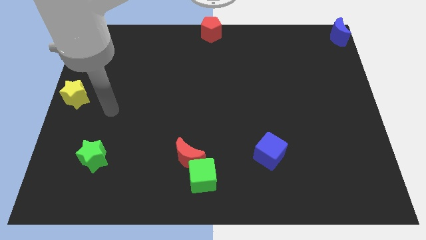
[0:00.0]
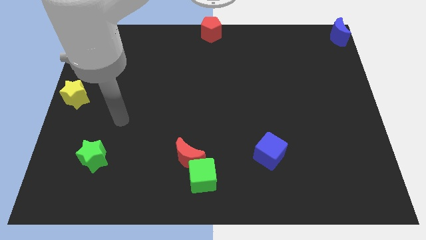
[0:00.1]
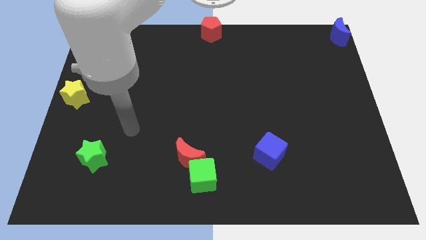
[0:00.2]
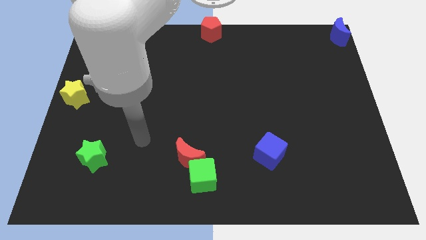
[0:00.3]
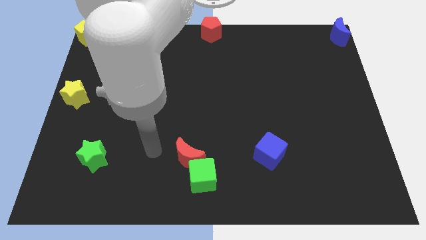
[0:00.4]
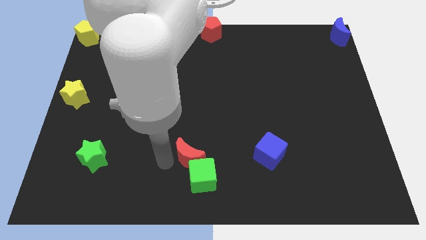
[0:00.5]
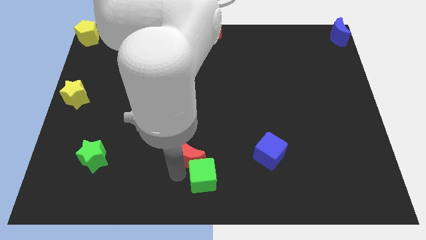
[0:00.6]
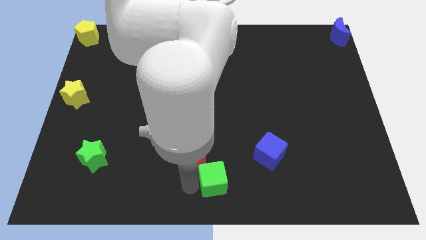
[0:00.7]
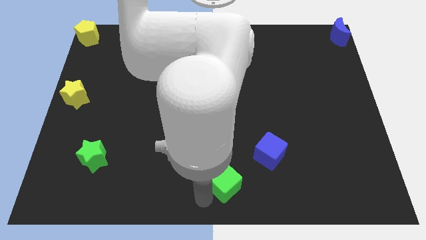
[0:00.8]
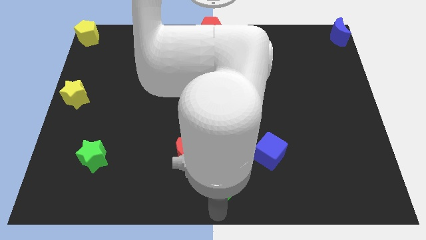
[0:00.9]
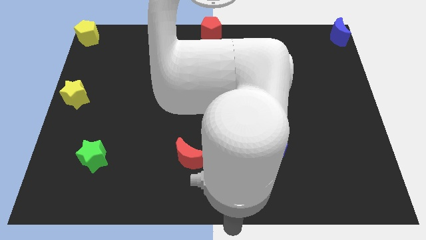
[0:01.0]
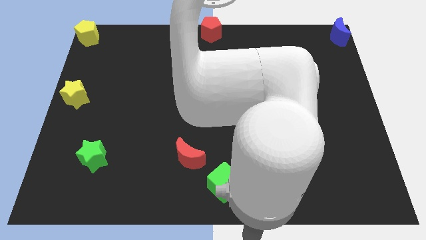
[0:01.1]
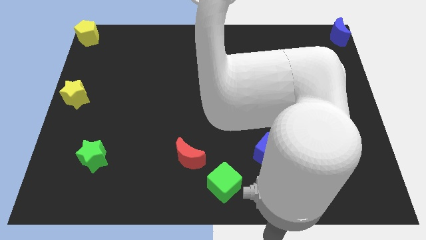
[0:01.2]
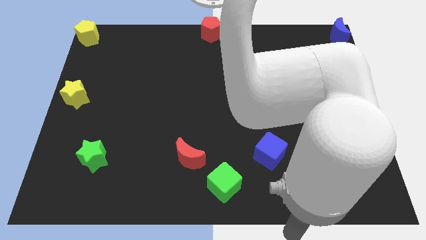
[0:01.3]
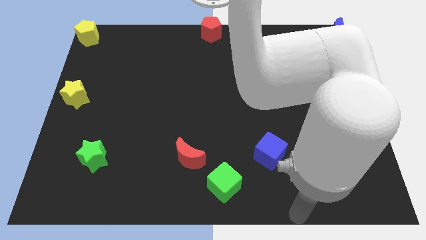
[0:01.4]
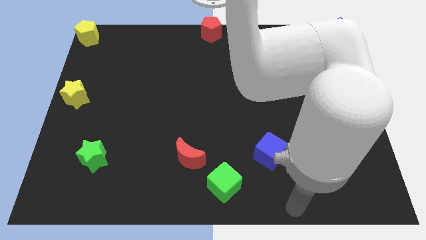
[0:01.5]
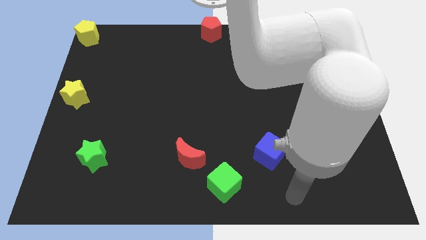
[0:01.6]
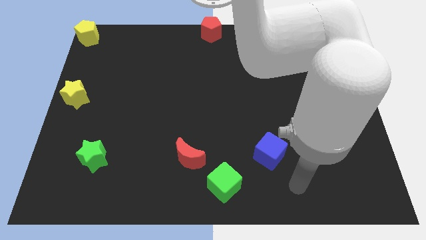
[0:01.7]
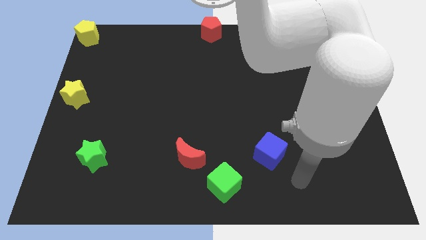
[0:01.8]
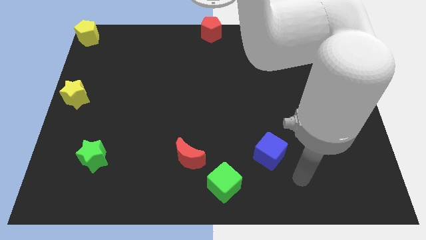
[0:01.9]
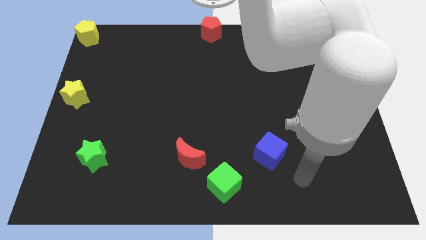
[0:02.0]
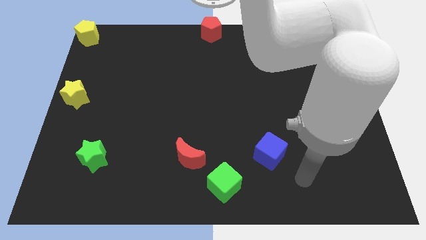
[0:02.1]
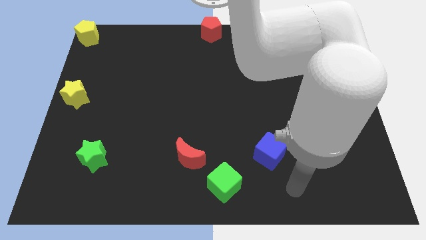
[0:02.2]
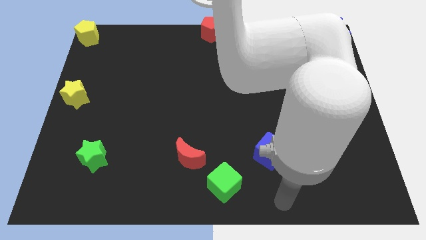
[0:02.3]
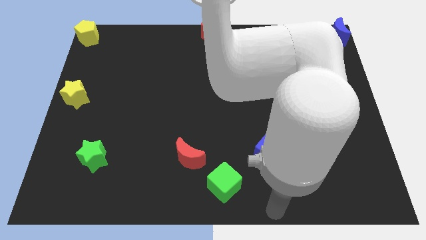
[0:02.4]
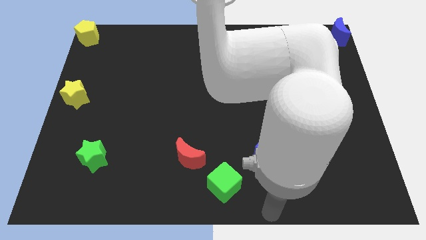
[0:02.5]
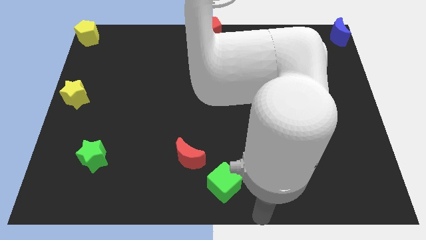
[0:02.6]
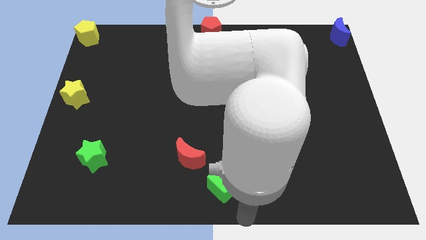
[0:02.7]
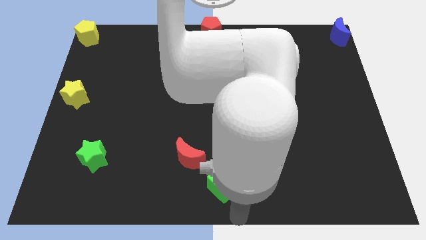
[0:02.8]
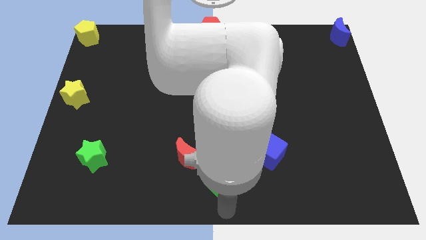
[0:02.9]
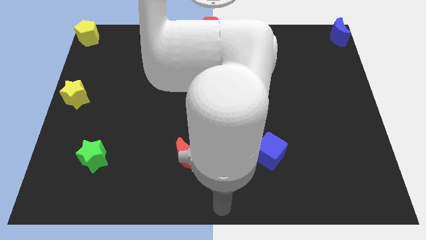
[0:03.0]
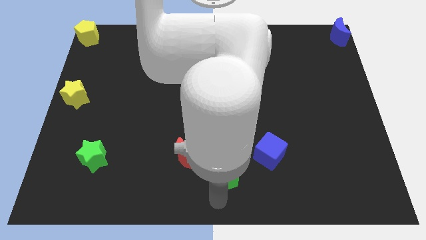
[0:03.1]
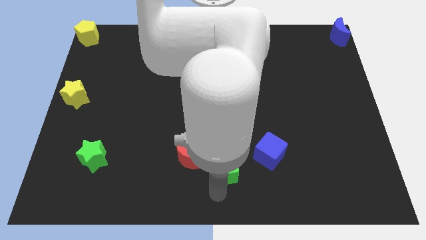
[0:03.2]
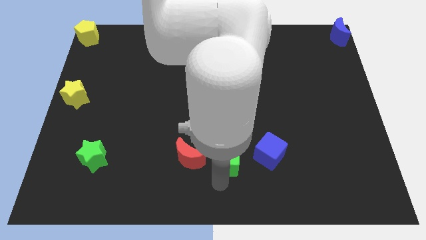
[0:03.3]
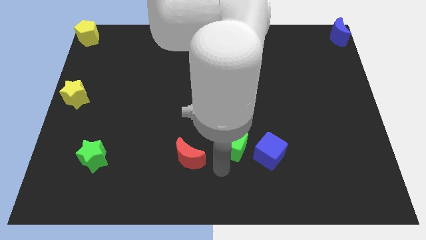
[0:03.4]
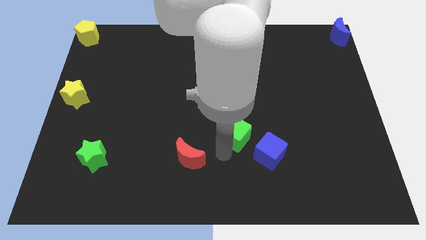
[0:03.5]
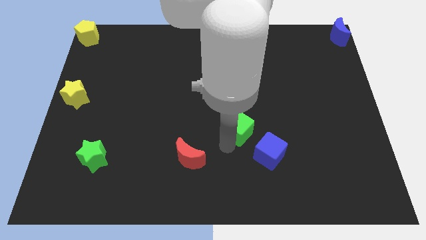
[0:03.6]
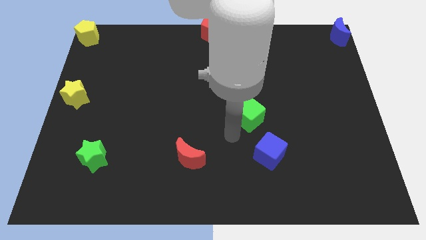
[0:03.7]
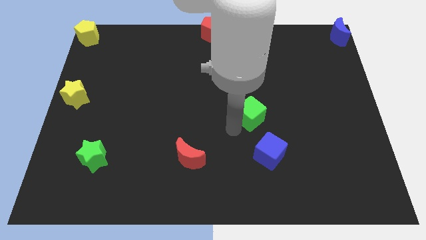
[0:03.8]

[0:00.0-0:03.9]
move green cube away from the red moon

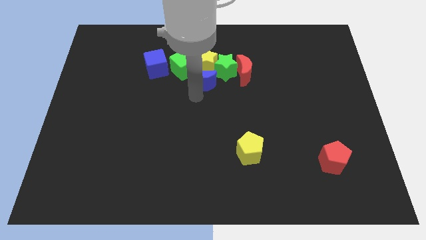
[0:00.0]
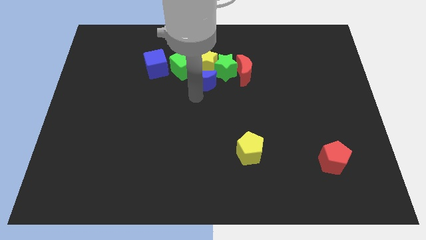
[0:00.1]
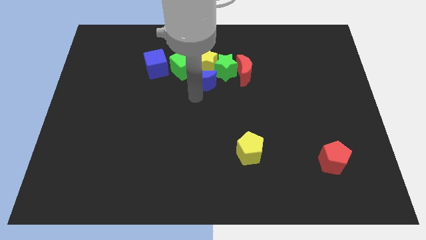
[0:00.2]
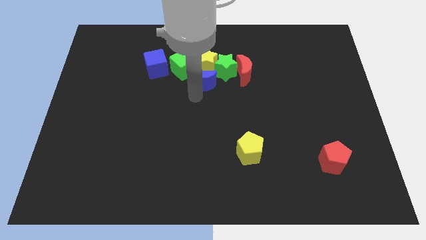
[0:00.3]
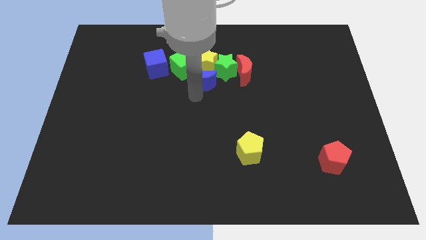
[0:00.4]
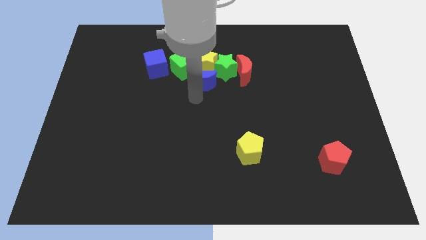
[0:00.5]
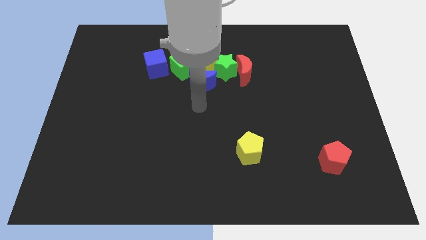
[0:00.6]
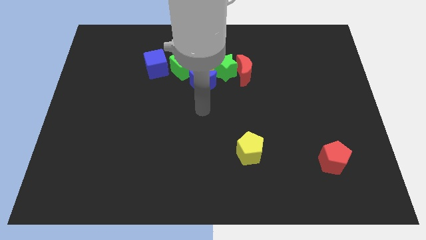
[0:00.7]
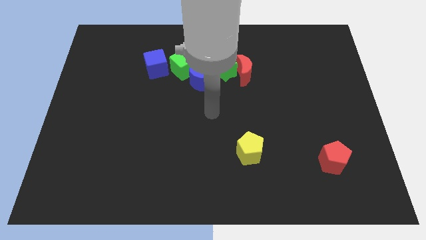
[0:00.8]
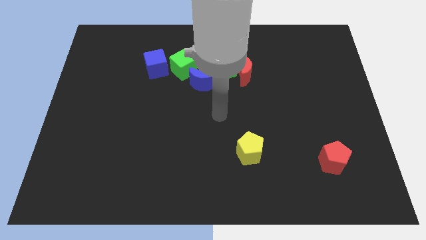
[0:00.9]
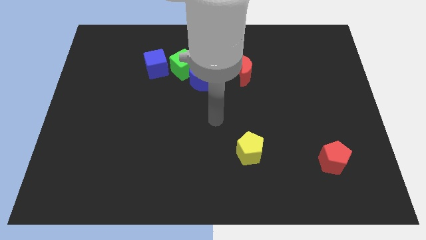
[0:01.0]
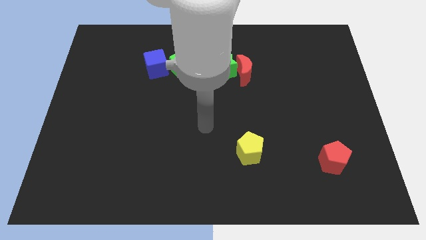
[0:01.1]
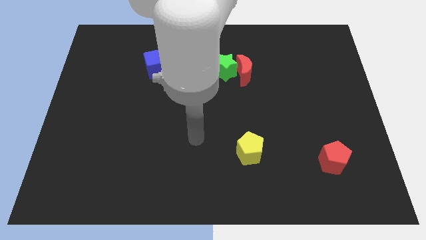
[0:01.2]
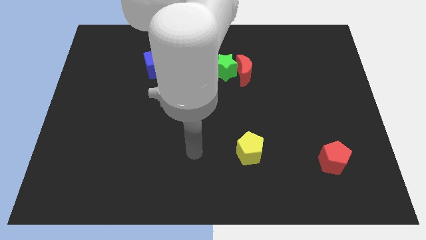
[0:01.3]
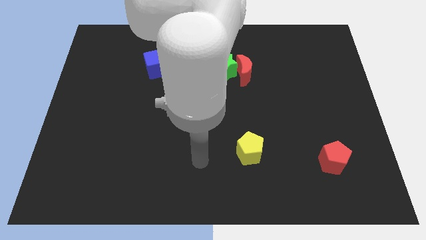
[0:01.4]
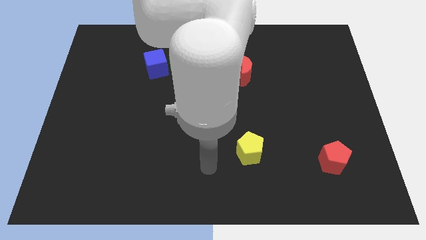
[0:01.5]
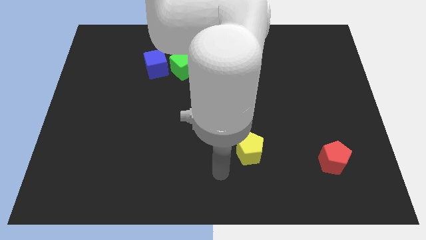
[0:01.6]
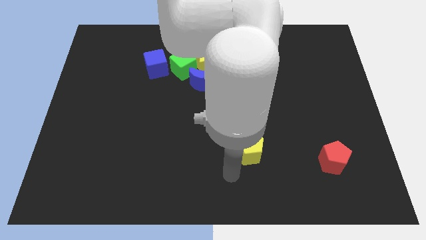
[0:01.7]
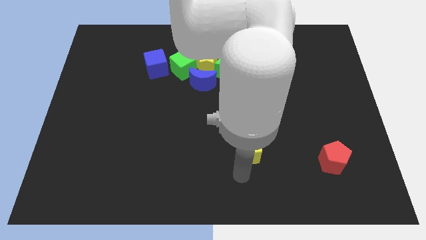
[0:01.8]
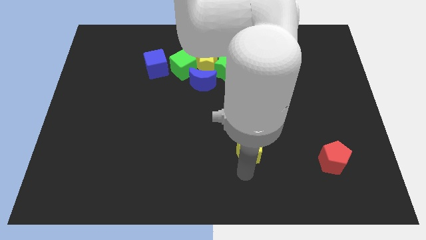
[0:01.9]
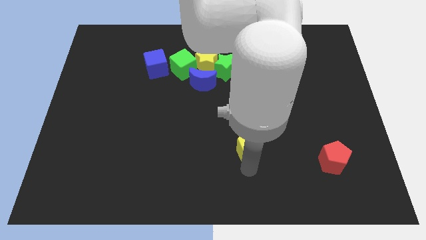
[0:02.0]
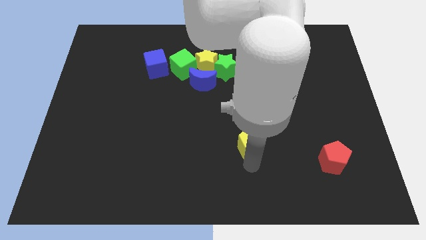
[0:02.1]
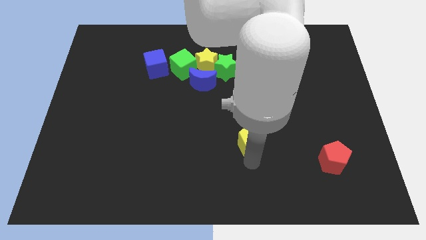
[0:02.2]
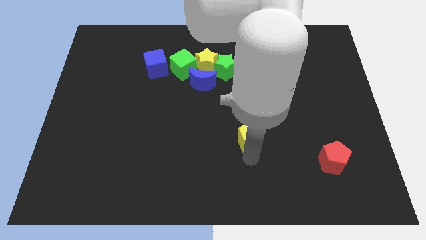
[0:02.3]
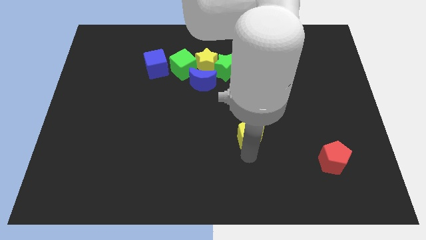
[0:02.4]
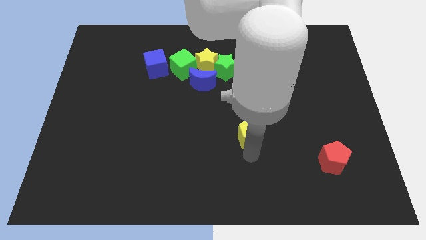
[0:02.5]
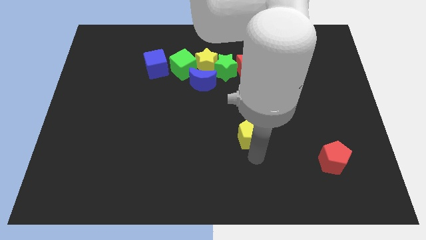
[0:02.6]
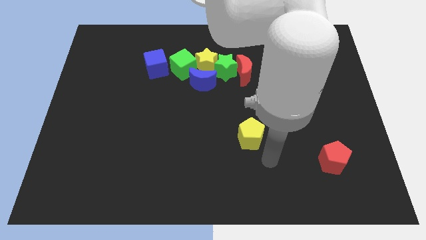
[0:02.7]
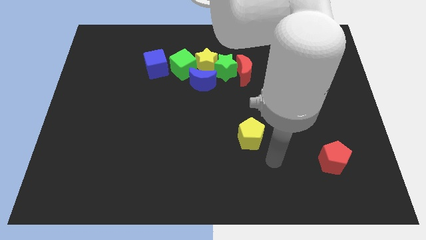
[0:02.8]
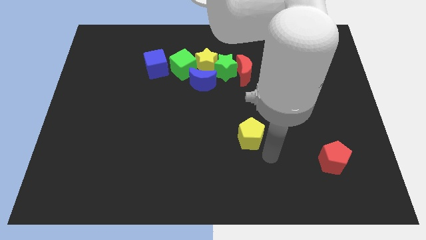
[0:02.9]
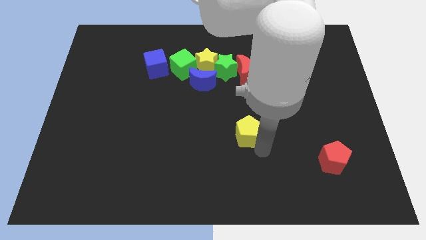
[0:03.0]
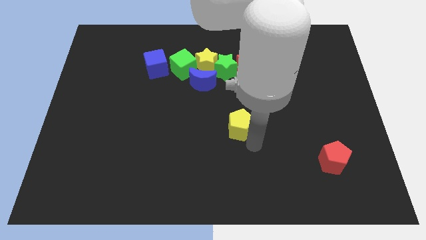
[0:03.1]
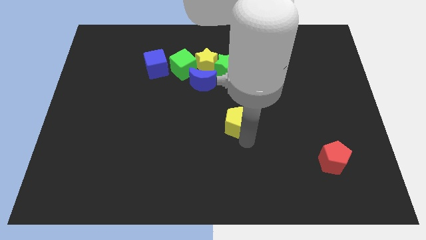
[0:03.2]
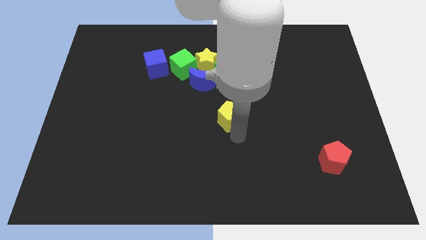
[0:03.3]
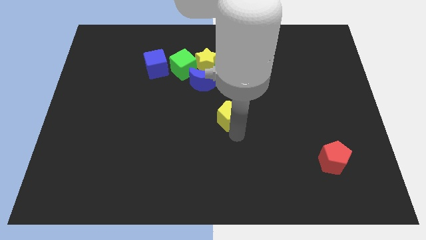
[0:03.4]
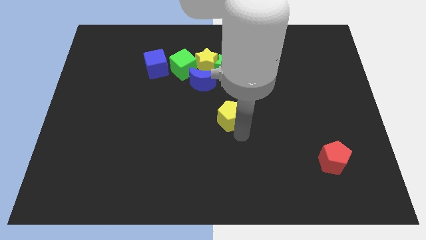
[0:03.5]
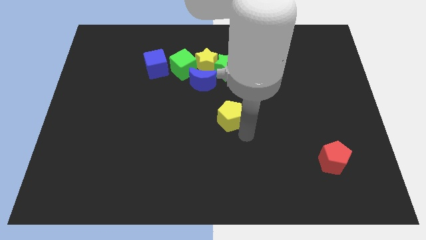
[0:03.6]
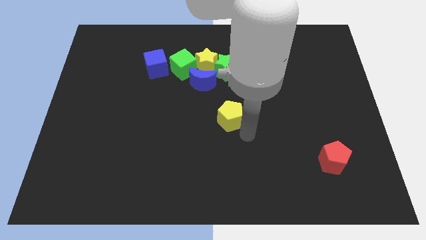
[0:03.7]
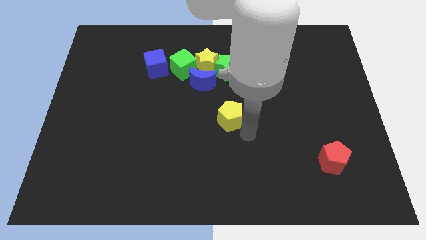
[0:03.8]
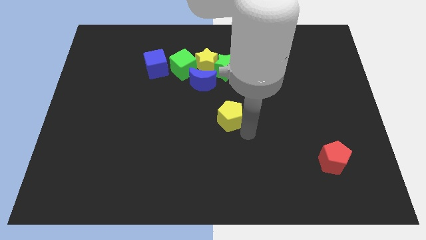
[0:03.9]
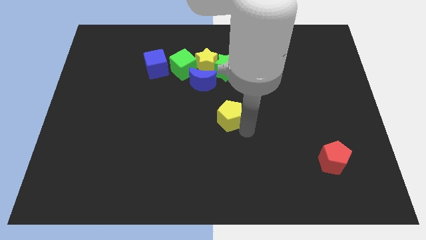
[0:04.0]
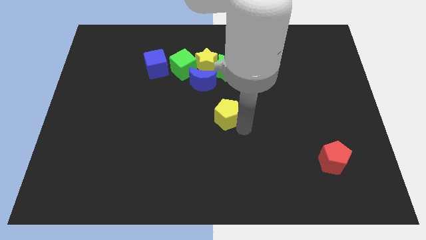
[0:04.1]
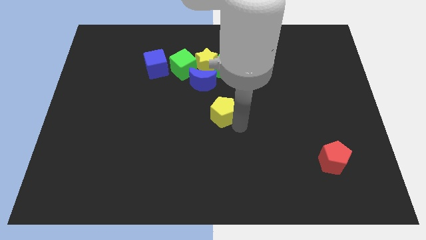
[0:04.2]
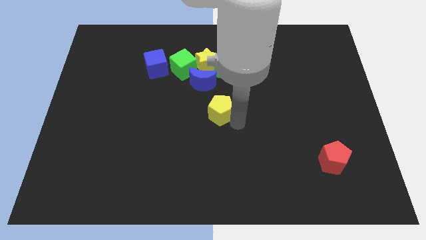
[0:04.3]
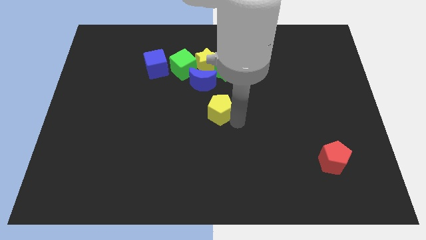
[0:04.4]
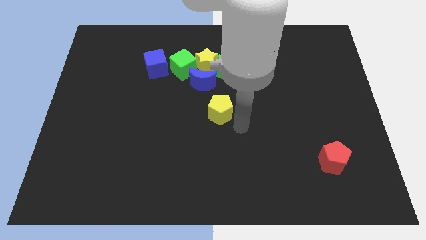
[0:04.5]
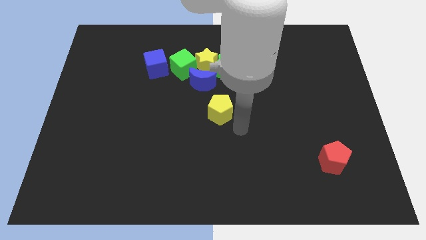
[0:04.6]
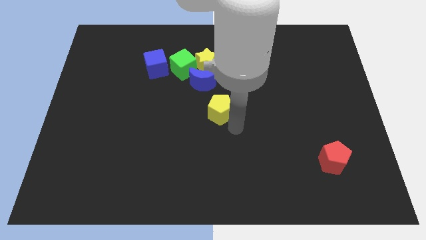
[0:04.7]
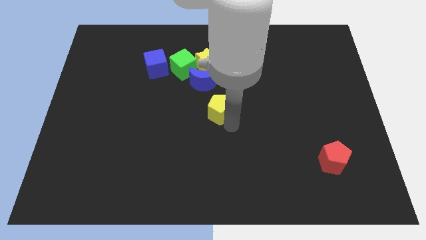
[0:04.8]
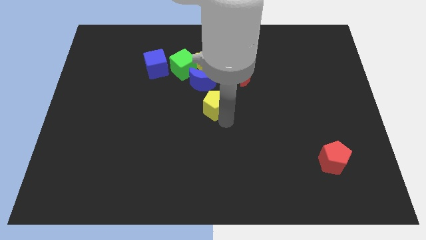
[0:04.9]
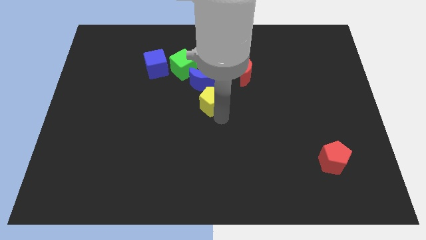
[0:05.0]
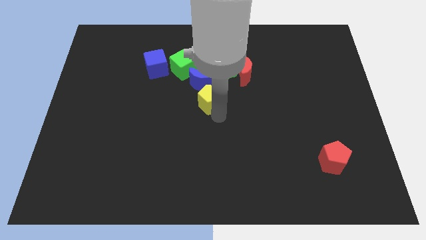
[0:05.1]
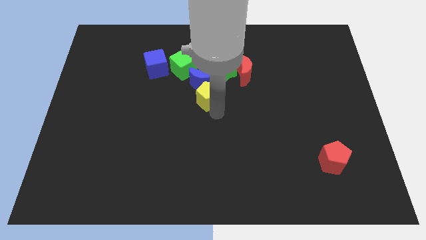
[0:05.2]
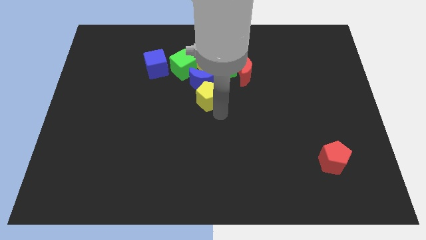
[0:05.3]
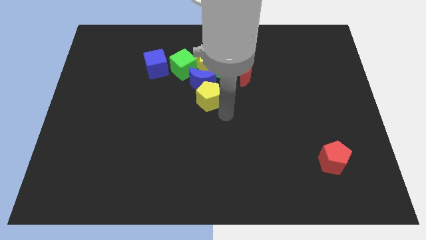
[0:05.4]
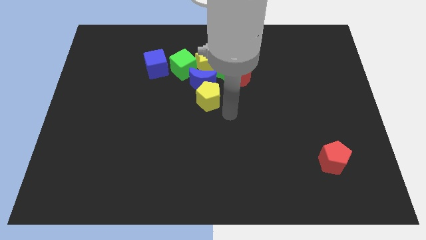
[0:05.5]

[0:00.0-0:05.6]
place the yellow pentagon below the blue crescent
